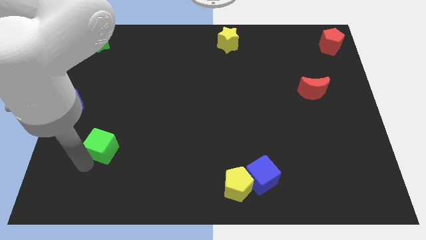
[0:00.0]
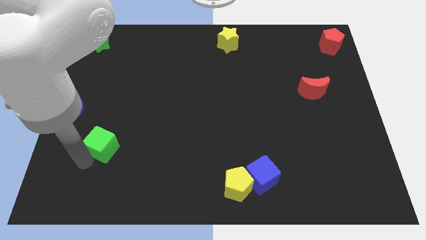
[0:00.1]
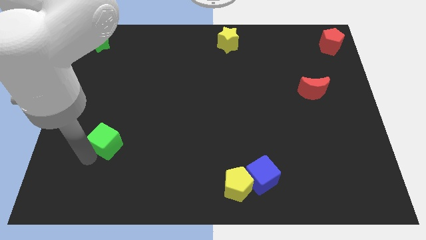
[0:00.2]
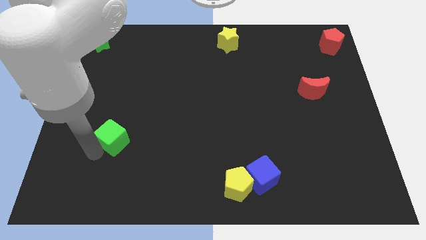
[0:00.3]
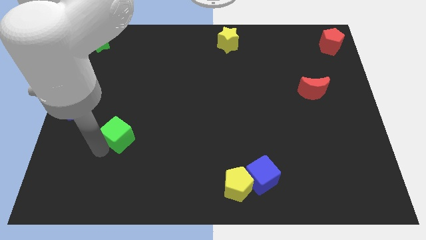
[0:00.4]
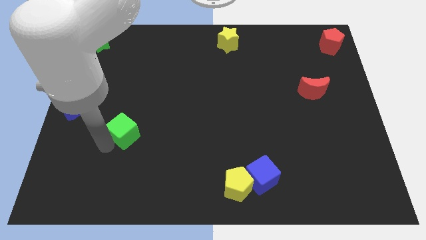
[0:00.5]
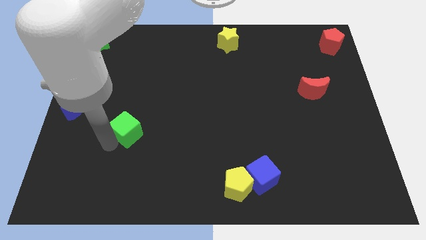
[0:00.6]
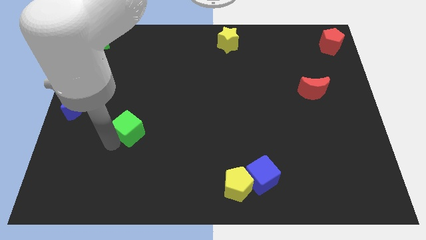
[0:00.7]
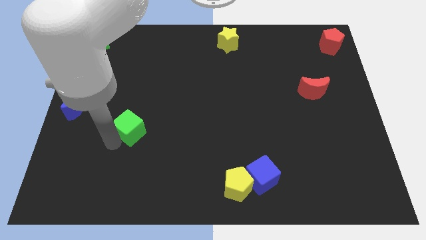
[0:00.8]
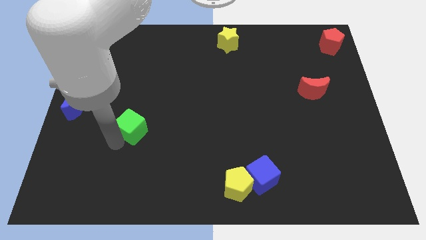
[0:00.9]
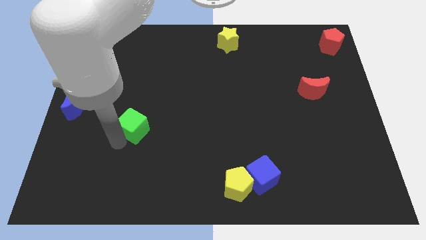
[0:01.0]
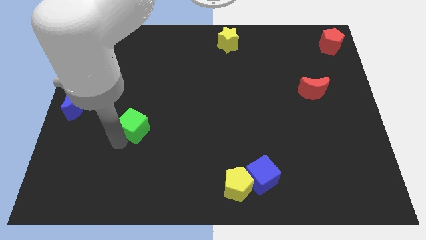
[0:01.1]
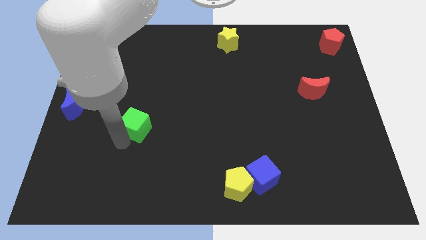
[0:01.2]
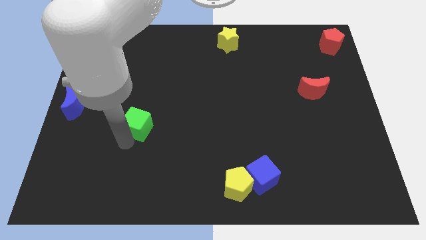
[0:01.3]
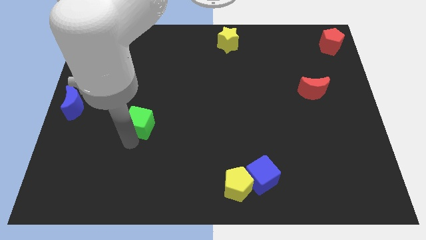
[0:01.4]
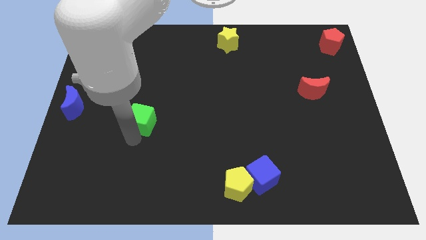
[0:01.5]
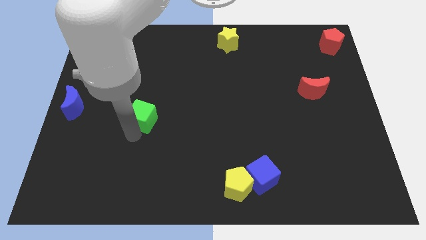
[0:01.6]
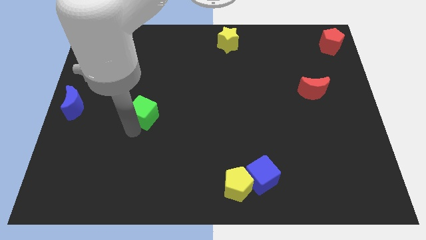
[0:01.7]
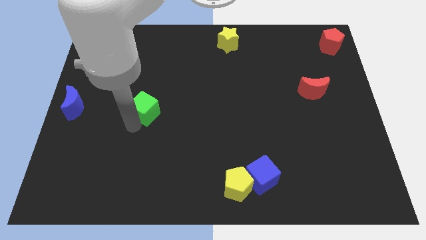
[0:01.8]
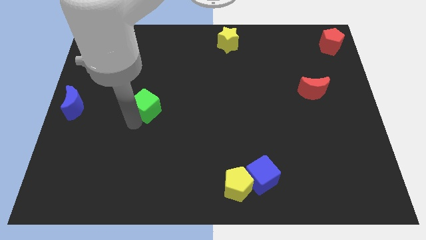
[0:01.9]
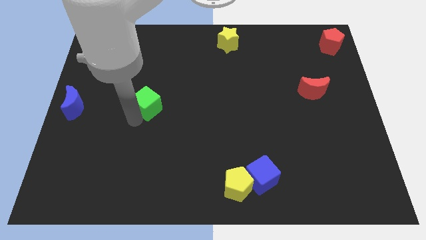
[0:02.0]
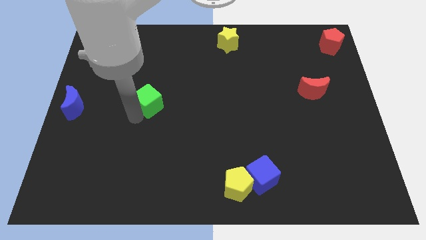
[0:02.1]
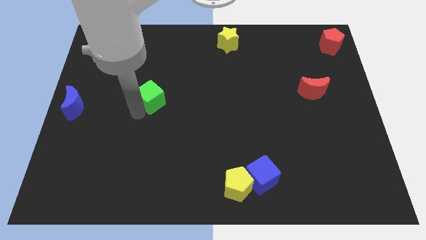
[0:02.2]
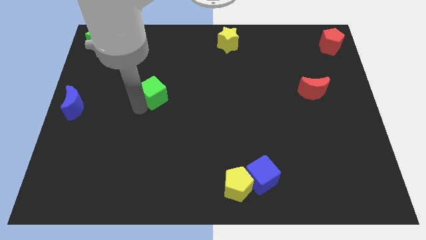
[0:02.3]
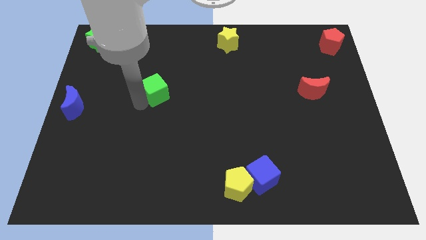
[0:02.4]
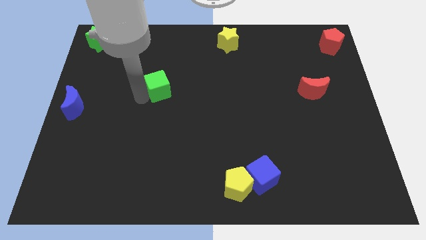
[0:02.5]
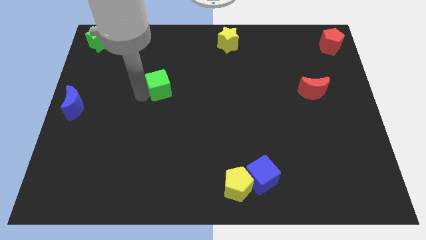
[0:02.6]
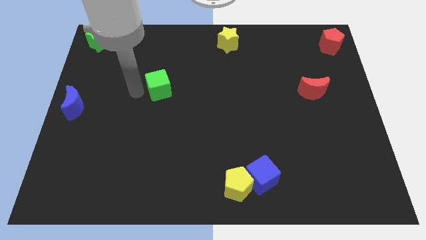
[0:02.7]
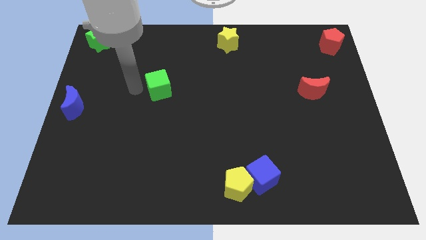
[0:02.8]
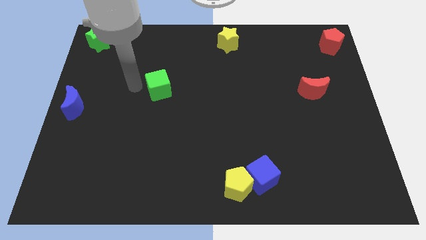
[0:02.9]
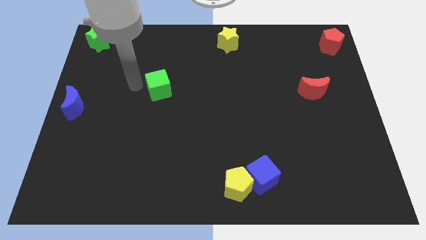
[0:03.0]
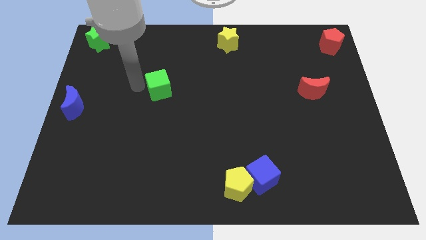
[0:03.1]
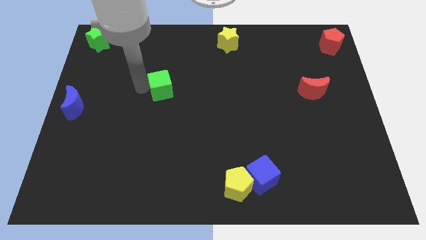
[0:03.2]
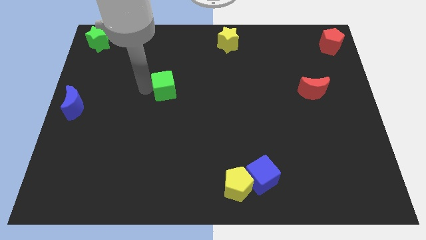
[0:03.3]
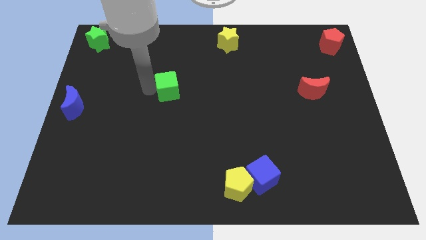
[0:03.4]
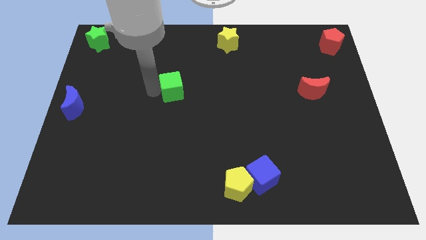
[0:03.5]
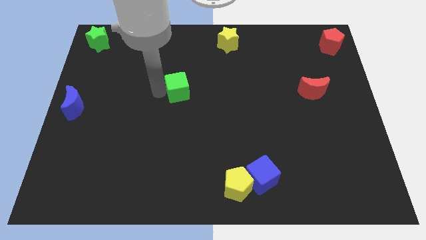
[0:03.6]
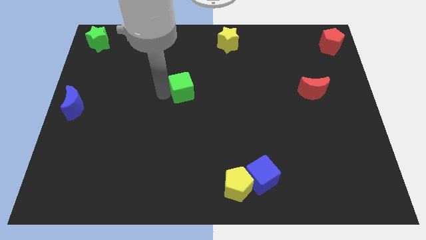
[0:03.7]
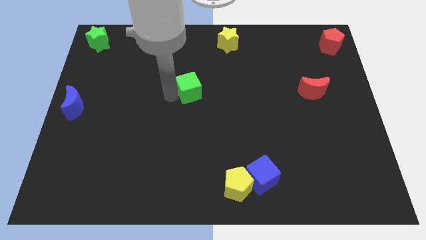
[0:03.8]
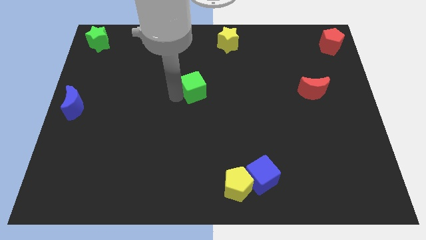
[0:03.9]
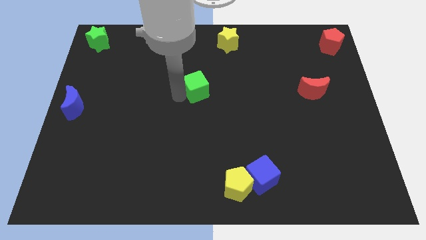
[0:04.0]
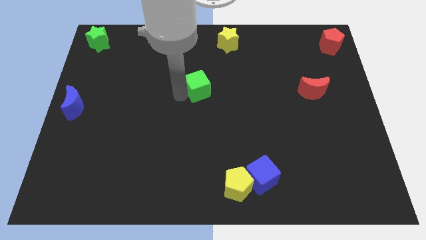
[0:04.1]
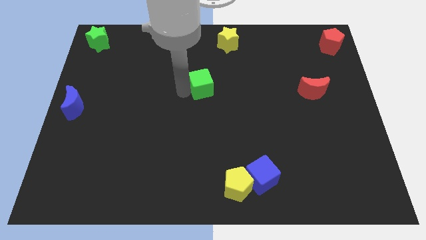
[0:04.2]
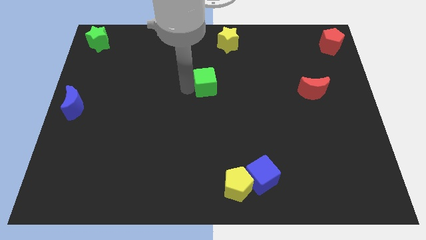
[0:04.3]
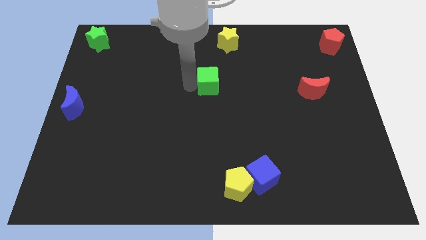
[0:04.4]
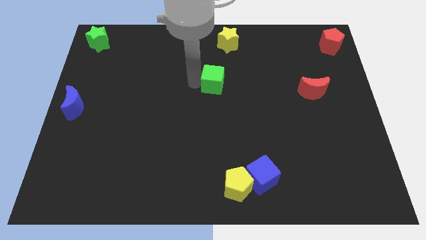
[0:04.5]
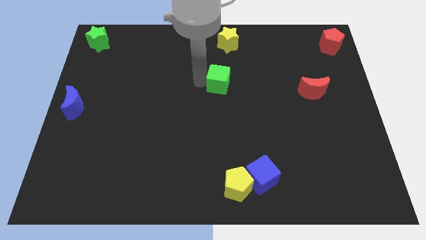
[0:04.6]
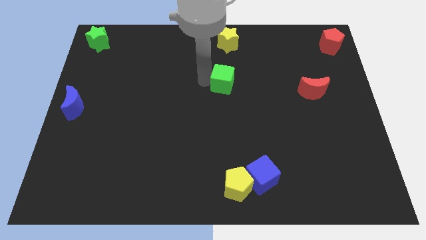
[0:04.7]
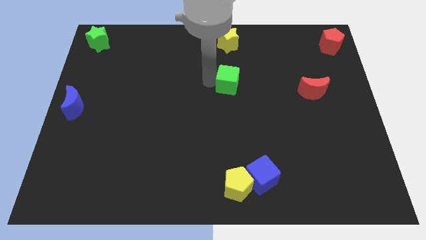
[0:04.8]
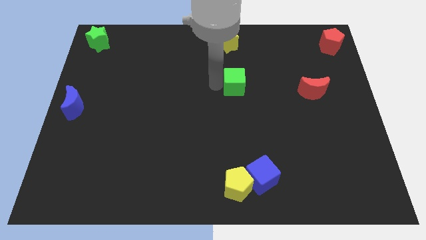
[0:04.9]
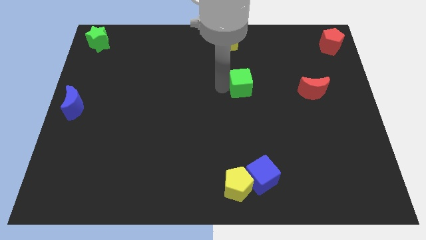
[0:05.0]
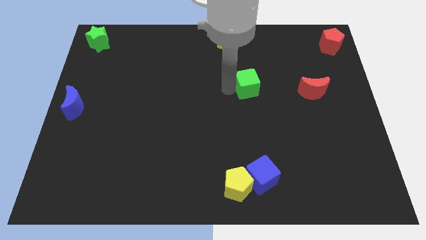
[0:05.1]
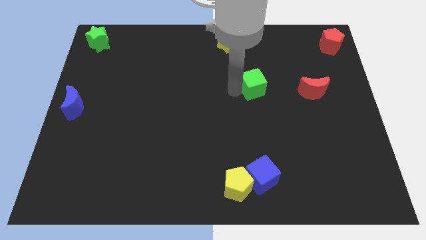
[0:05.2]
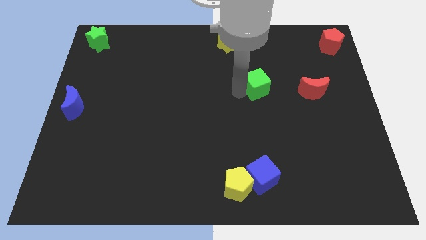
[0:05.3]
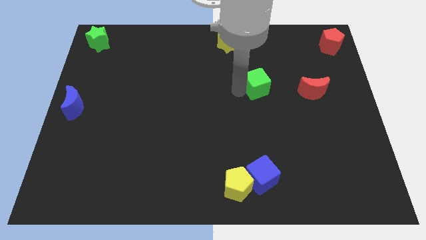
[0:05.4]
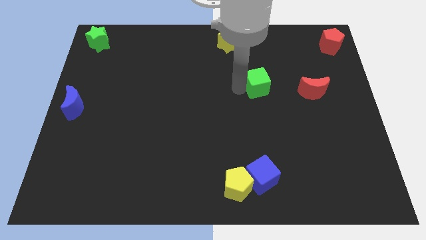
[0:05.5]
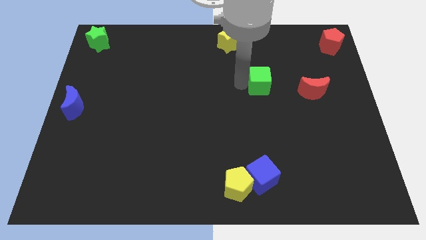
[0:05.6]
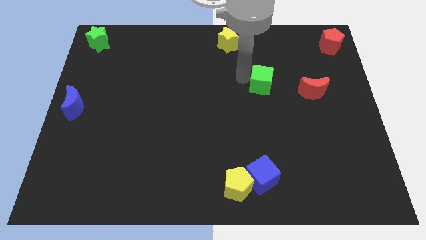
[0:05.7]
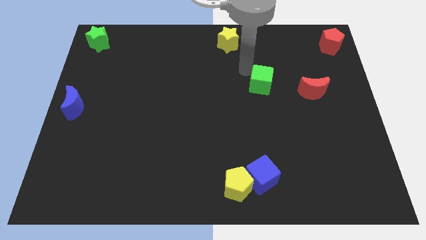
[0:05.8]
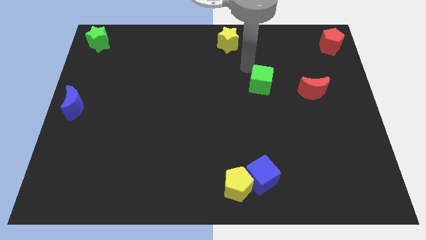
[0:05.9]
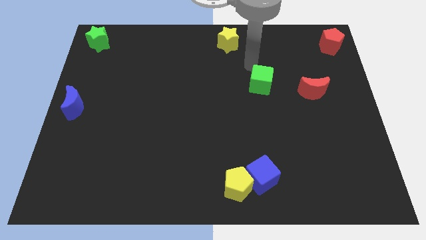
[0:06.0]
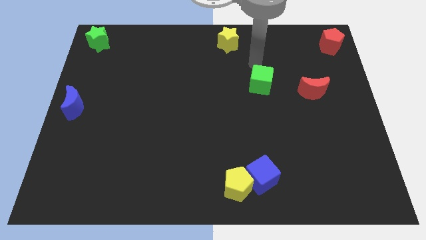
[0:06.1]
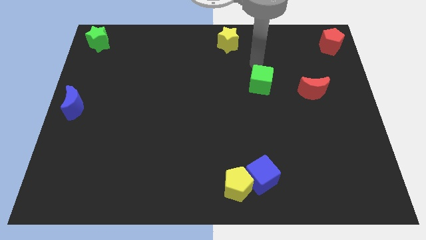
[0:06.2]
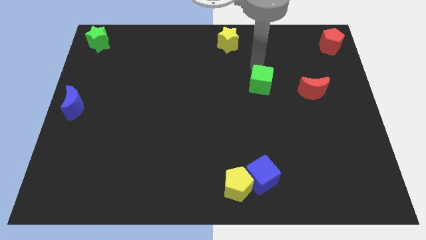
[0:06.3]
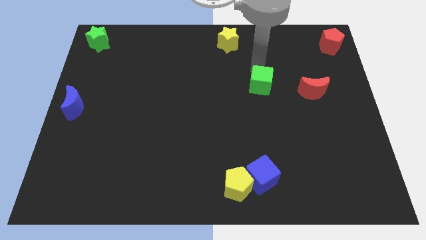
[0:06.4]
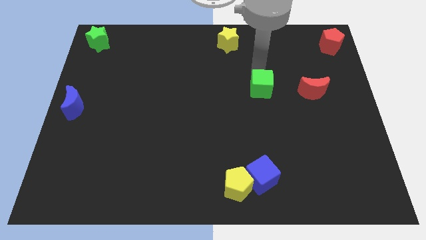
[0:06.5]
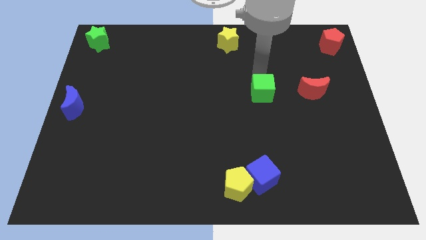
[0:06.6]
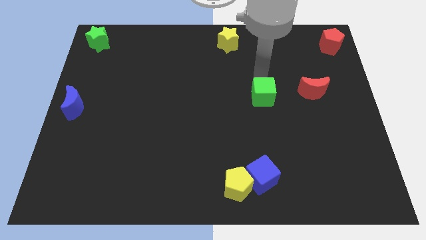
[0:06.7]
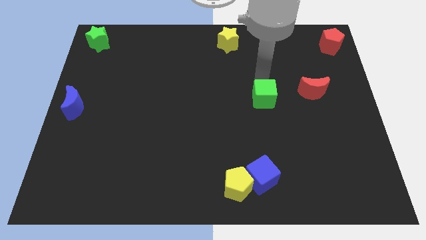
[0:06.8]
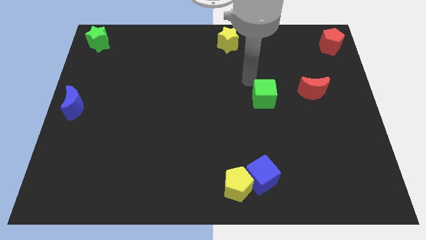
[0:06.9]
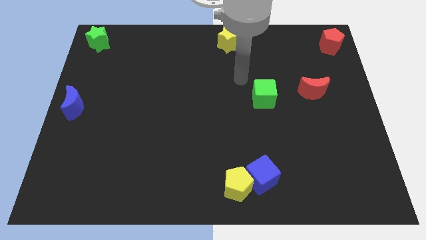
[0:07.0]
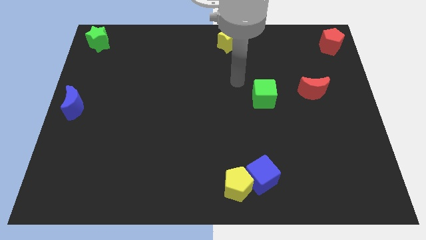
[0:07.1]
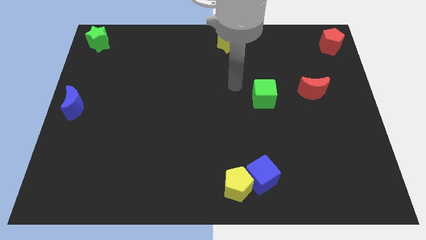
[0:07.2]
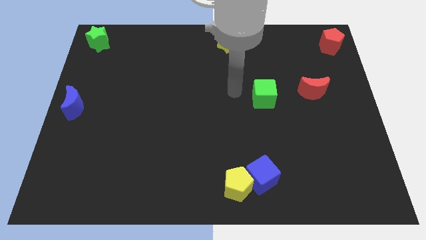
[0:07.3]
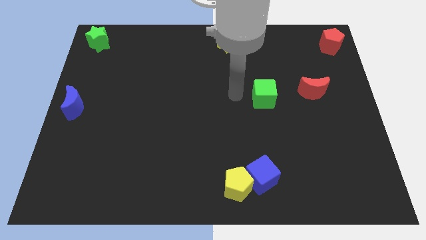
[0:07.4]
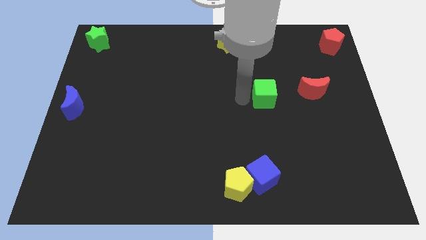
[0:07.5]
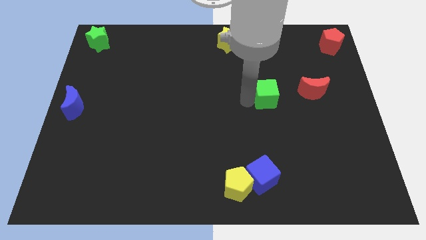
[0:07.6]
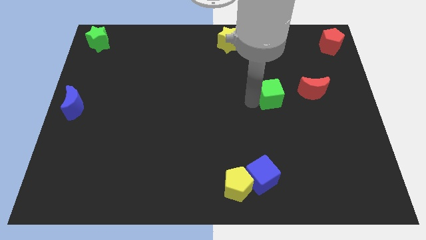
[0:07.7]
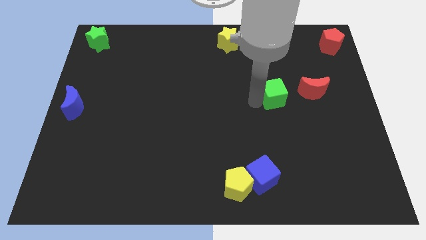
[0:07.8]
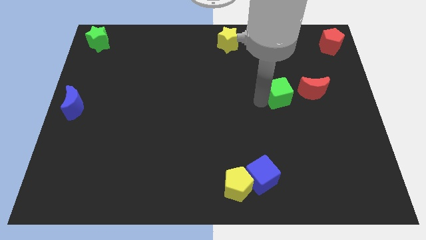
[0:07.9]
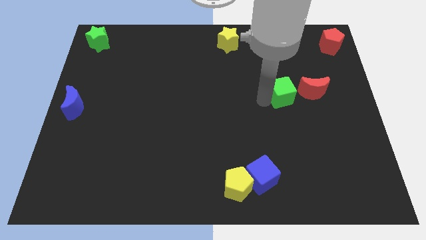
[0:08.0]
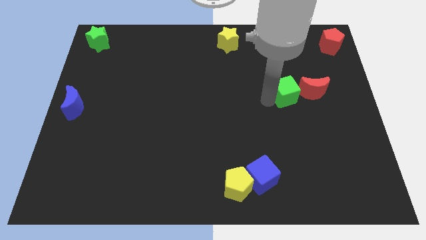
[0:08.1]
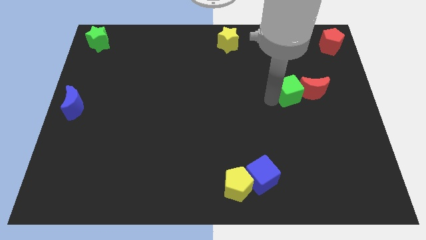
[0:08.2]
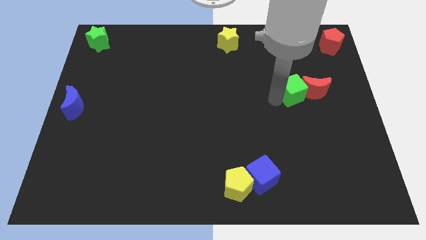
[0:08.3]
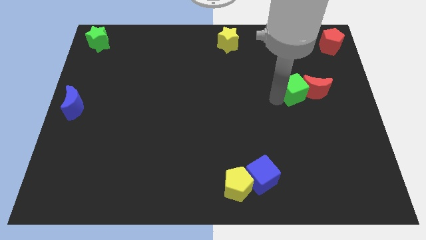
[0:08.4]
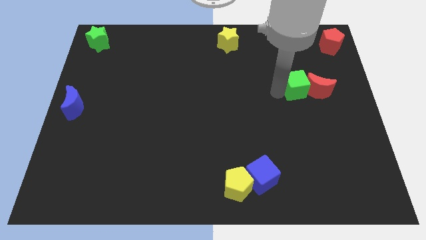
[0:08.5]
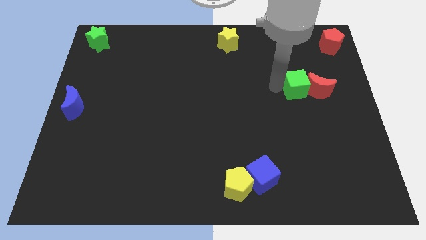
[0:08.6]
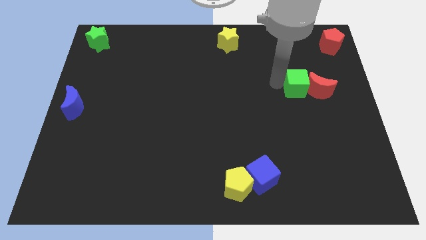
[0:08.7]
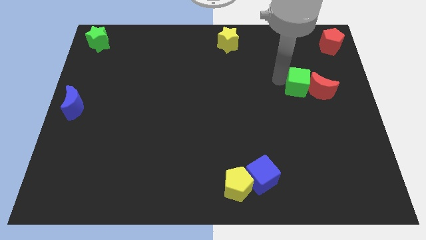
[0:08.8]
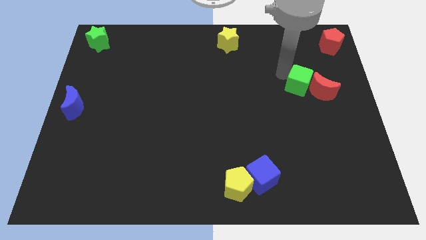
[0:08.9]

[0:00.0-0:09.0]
push the green cube into the red crescent
